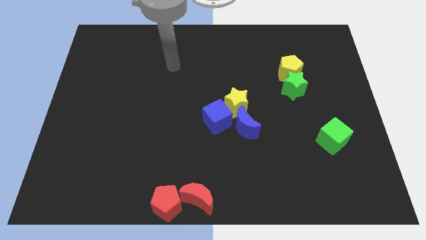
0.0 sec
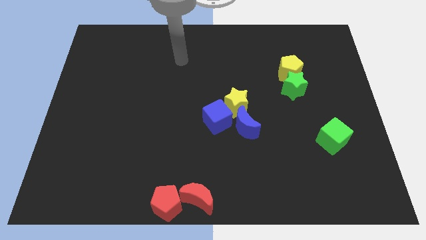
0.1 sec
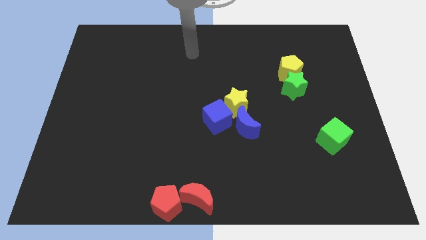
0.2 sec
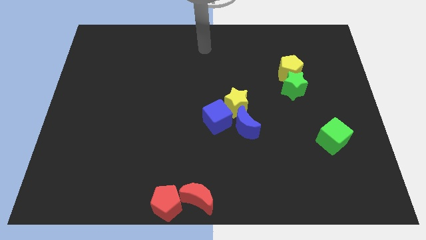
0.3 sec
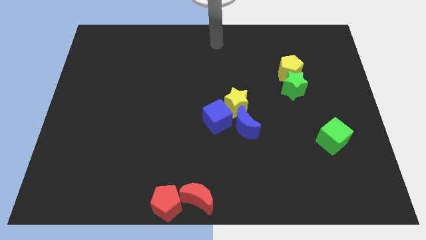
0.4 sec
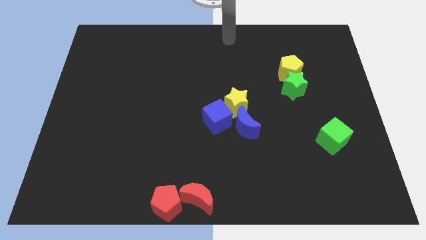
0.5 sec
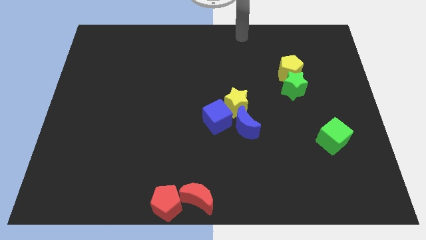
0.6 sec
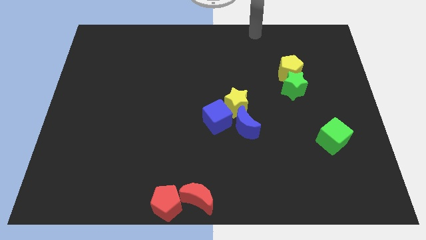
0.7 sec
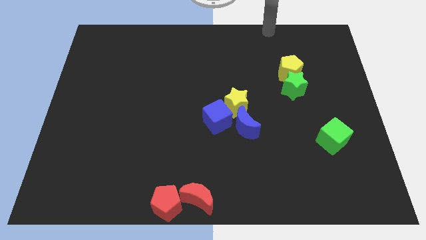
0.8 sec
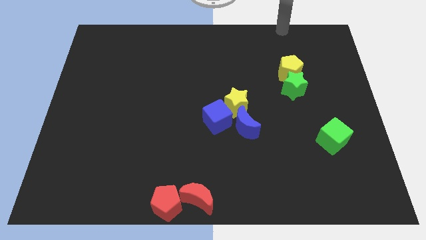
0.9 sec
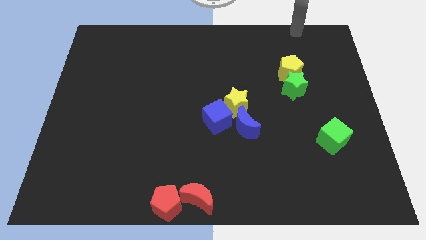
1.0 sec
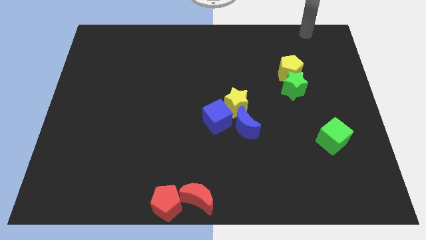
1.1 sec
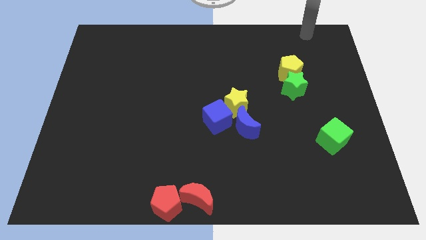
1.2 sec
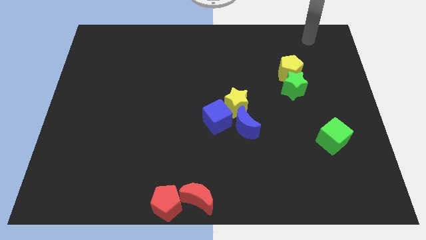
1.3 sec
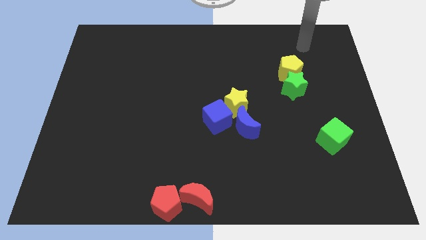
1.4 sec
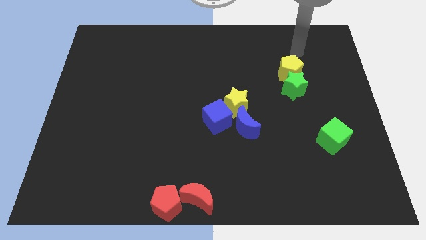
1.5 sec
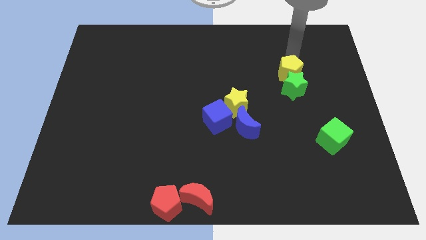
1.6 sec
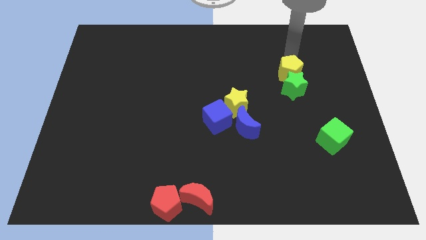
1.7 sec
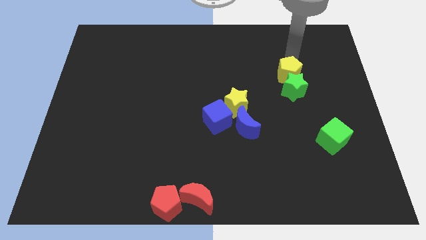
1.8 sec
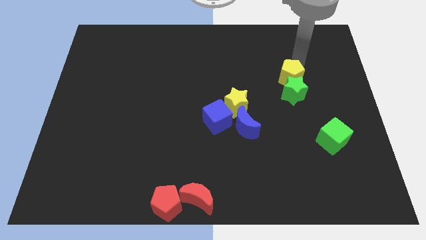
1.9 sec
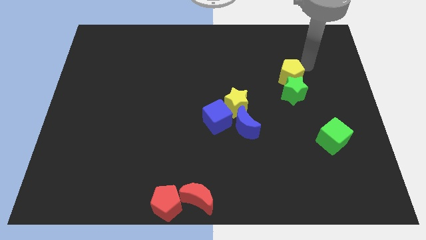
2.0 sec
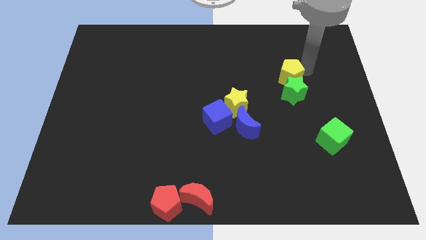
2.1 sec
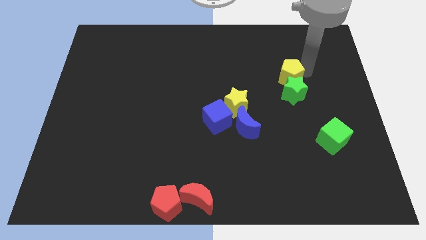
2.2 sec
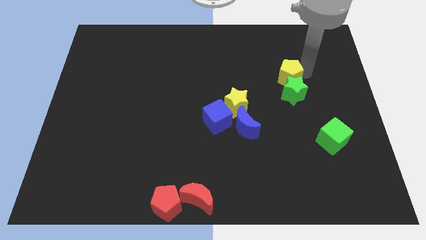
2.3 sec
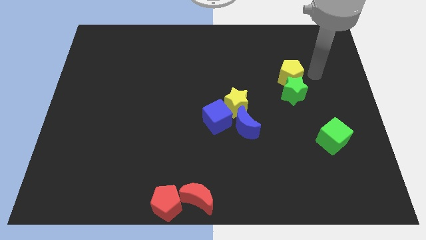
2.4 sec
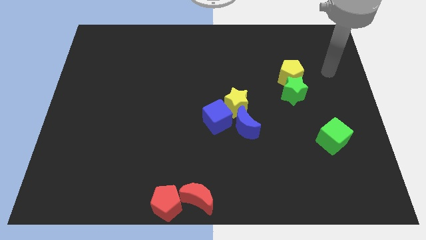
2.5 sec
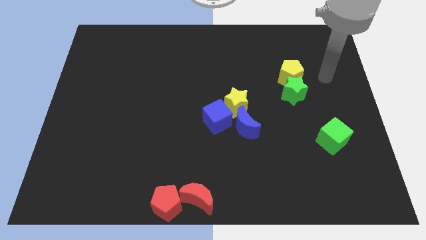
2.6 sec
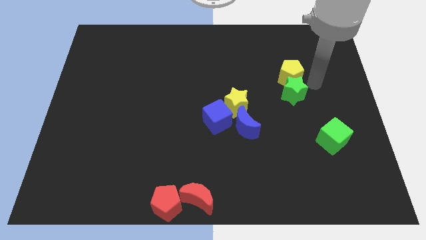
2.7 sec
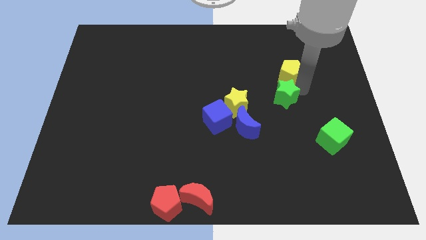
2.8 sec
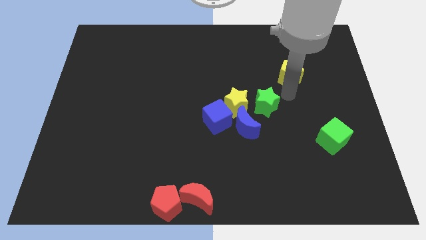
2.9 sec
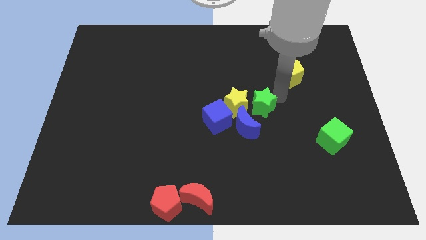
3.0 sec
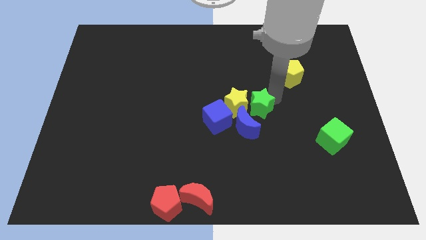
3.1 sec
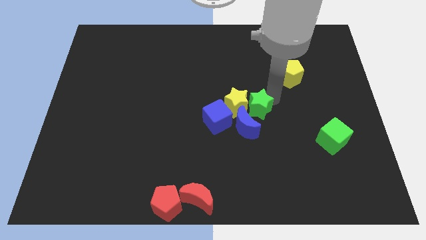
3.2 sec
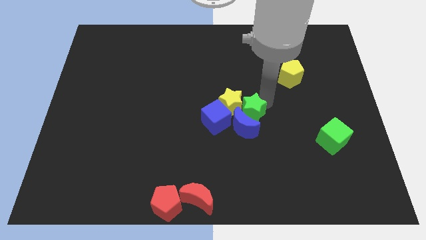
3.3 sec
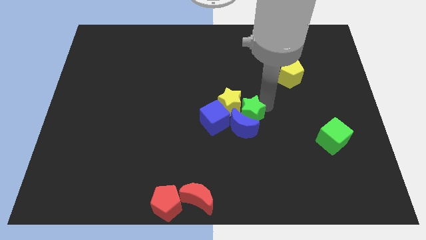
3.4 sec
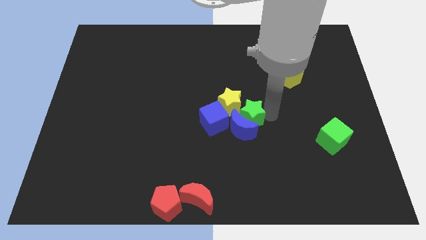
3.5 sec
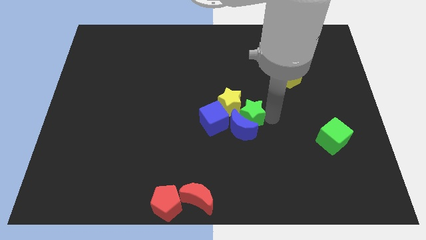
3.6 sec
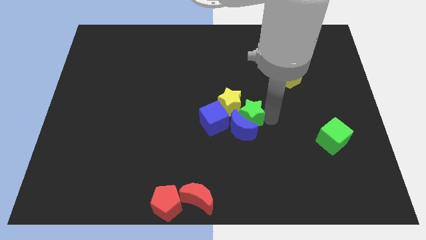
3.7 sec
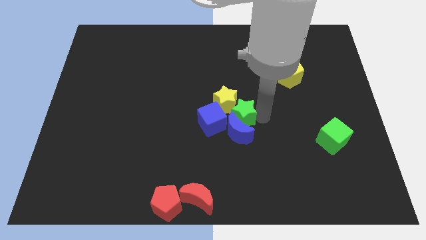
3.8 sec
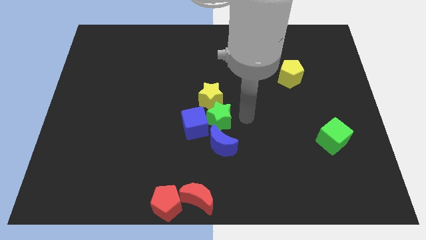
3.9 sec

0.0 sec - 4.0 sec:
push the green star into the blue crescent

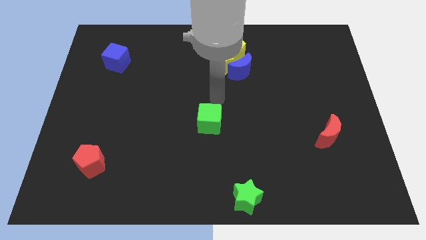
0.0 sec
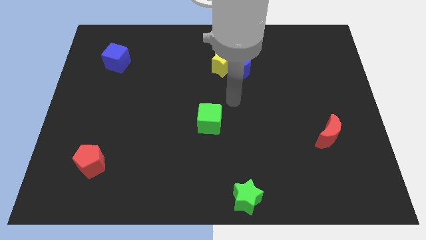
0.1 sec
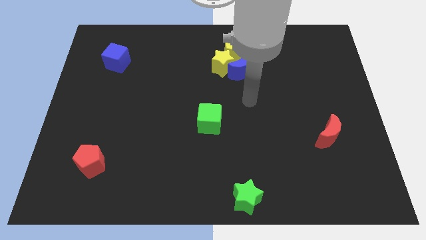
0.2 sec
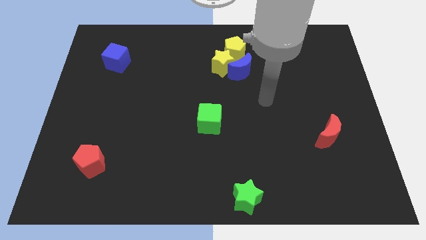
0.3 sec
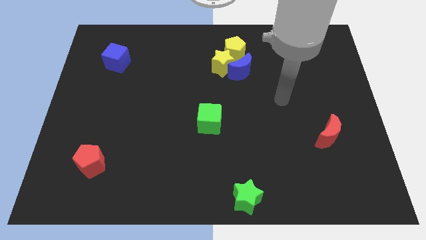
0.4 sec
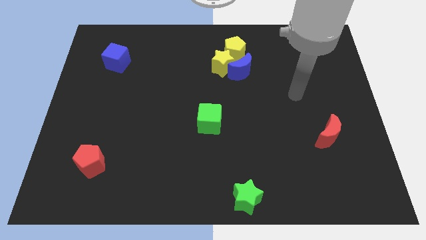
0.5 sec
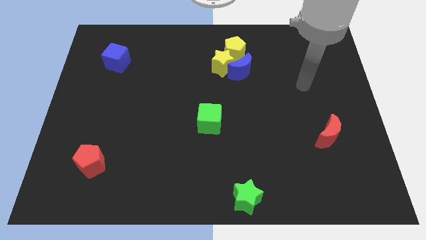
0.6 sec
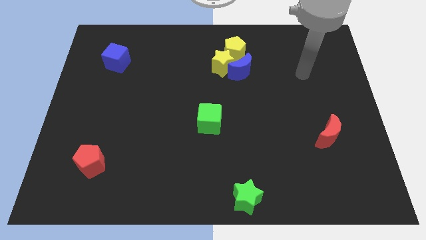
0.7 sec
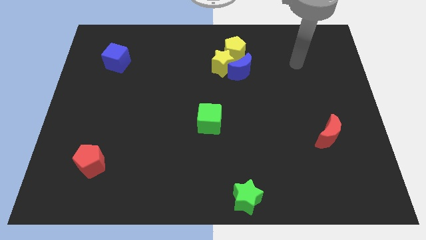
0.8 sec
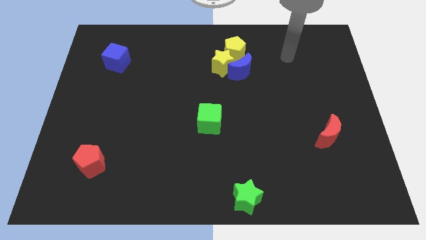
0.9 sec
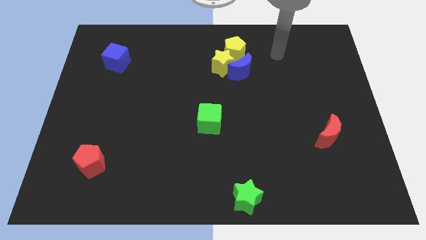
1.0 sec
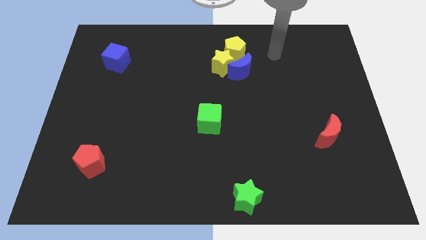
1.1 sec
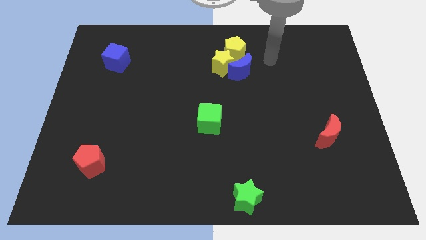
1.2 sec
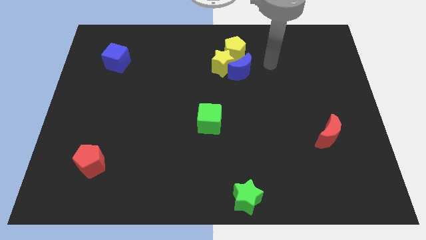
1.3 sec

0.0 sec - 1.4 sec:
point your arm towards the right side of blue moon

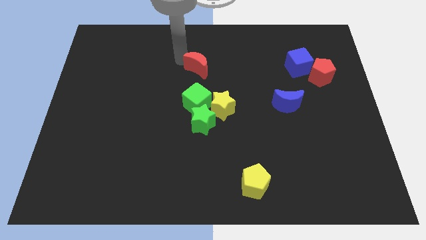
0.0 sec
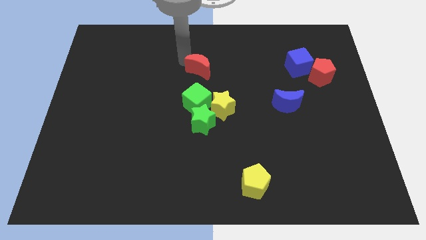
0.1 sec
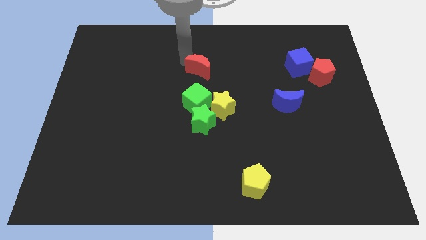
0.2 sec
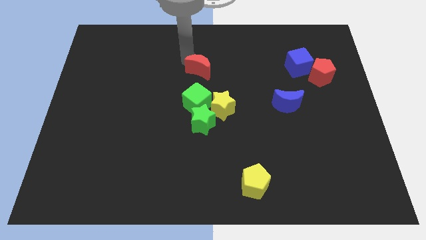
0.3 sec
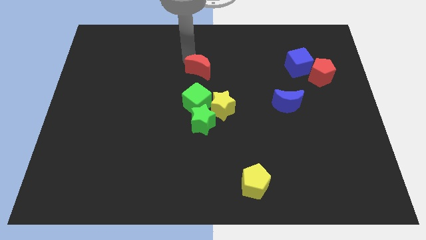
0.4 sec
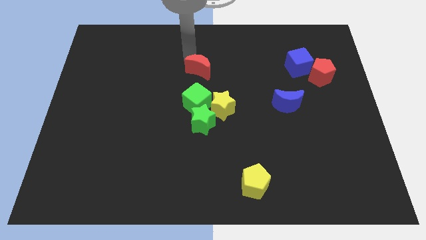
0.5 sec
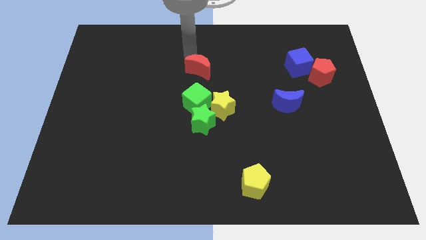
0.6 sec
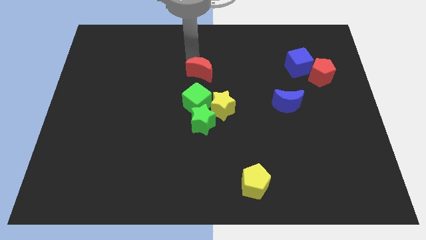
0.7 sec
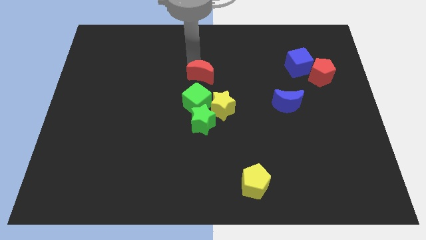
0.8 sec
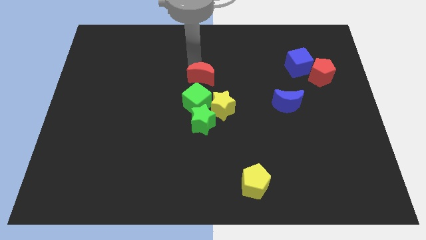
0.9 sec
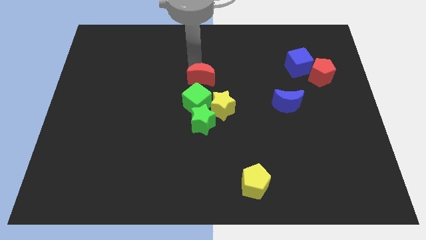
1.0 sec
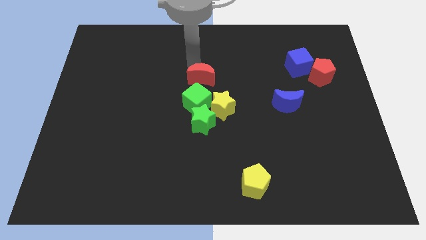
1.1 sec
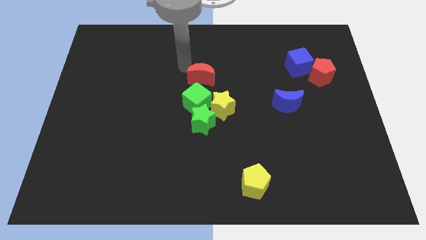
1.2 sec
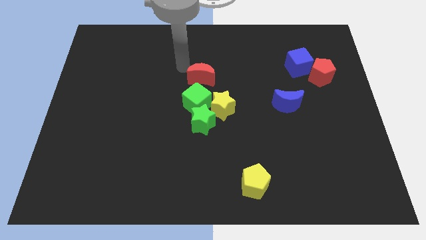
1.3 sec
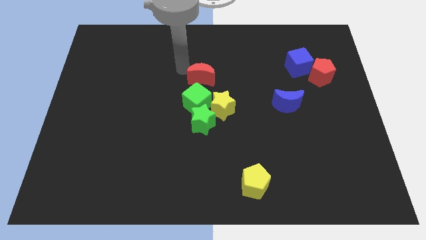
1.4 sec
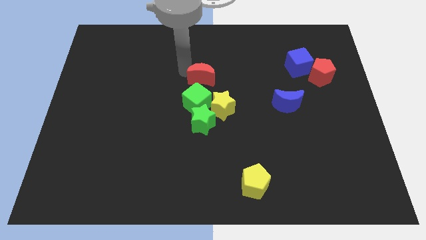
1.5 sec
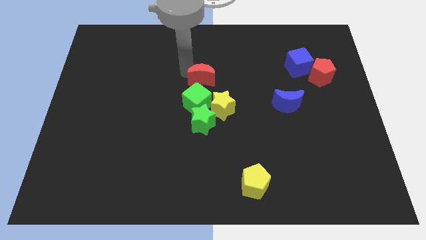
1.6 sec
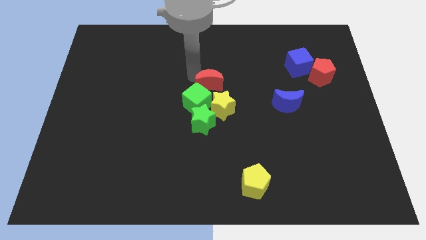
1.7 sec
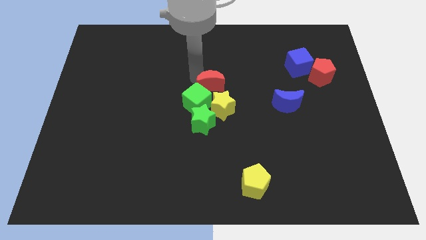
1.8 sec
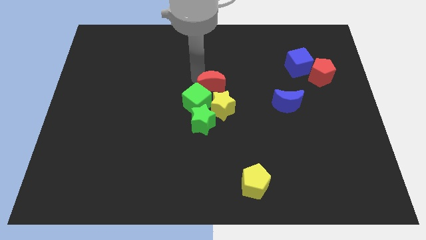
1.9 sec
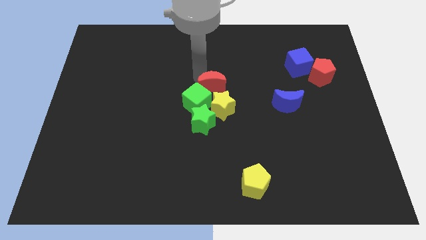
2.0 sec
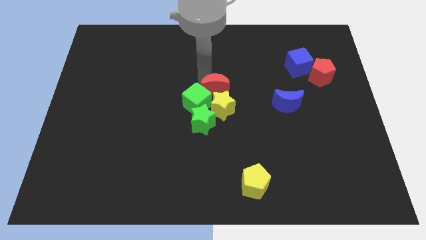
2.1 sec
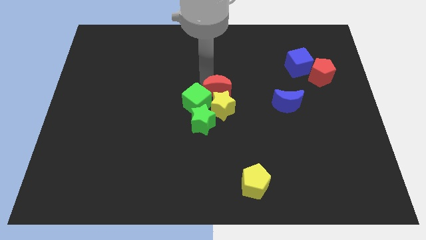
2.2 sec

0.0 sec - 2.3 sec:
push red moon close to the yellow star

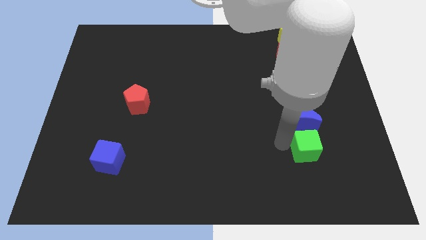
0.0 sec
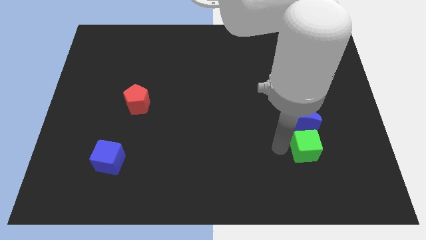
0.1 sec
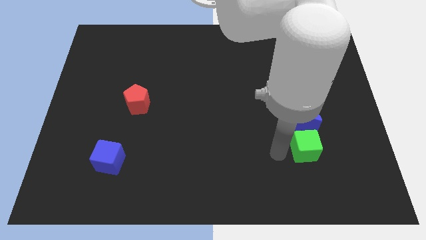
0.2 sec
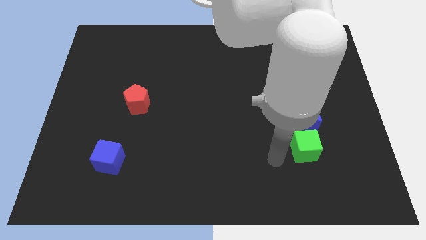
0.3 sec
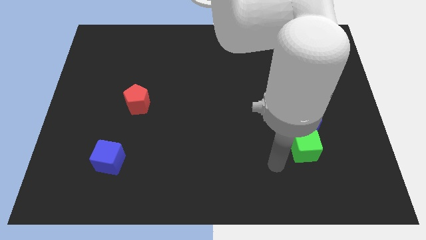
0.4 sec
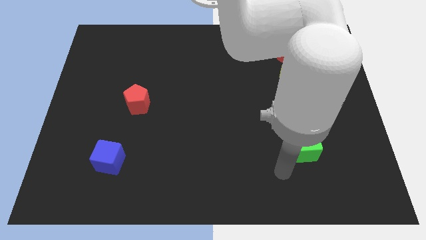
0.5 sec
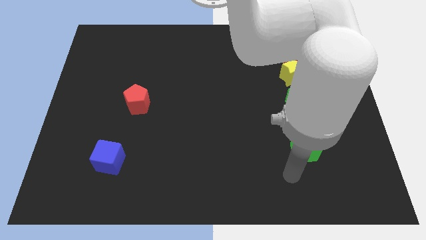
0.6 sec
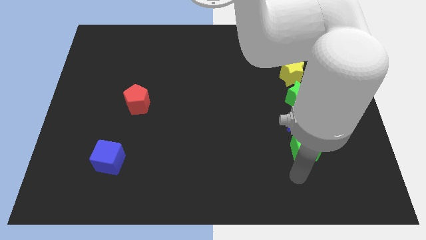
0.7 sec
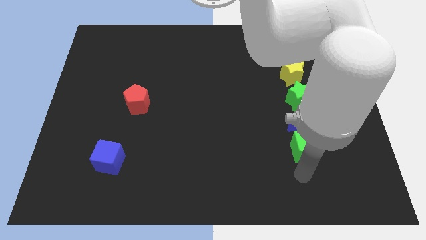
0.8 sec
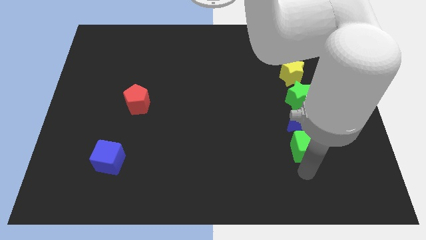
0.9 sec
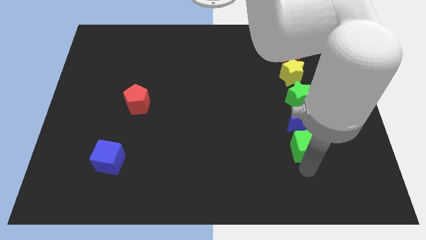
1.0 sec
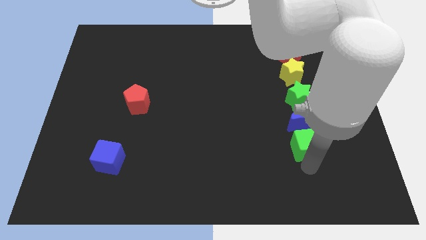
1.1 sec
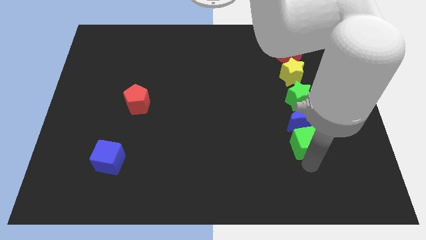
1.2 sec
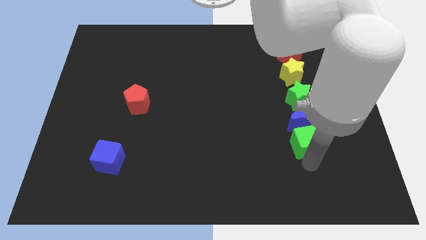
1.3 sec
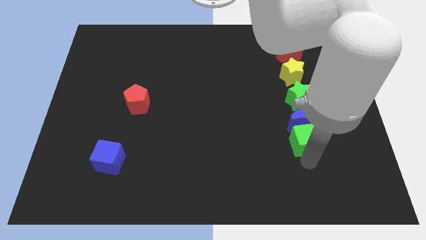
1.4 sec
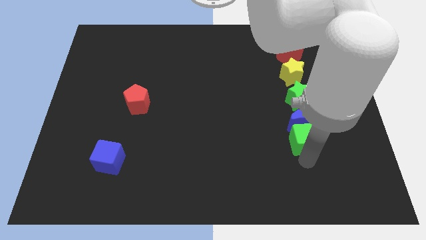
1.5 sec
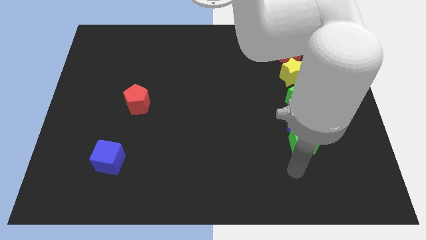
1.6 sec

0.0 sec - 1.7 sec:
move green cube into blue moon
